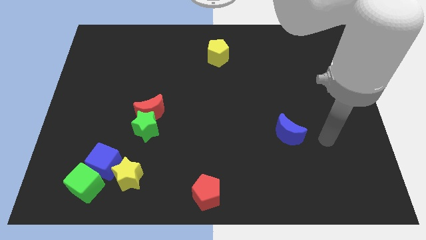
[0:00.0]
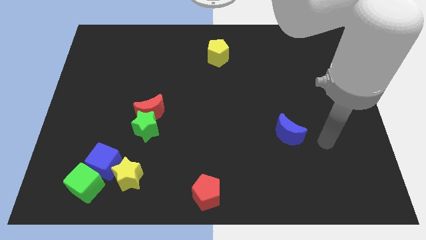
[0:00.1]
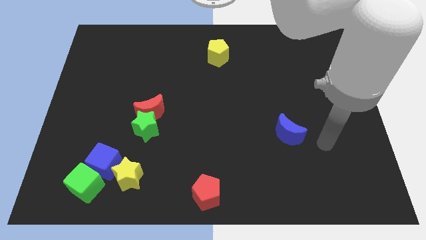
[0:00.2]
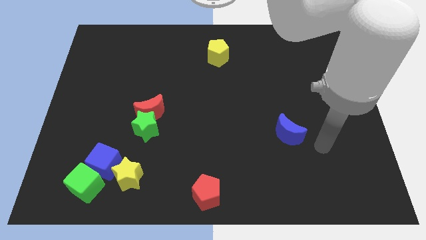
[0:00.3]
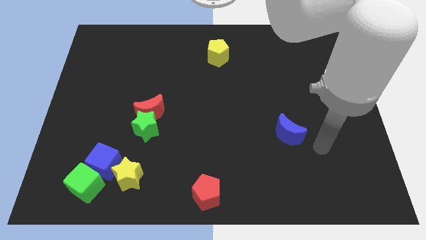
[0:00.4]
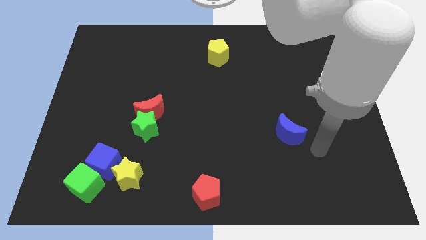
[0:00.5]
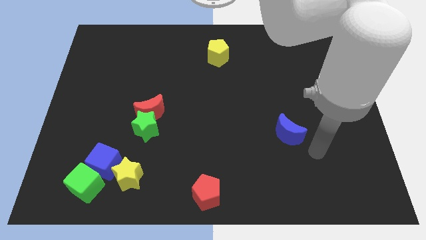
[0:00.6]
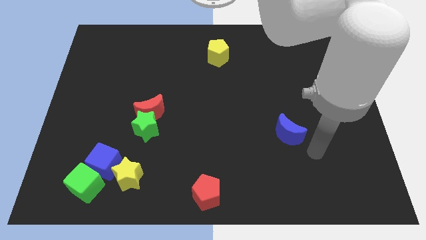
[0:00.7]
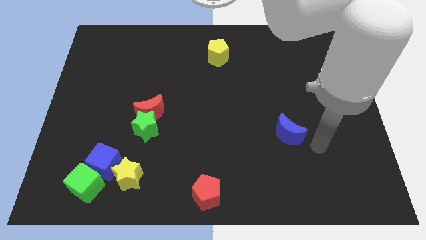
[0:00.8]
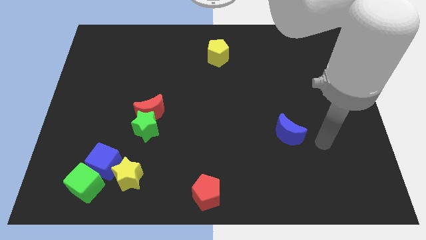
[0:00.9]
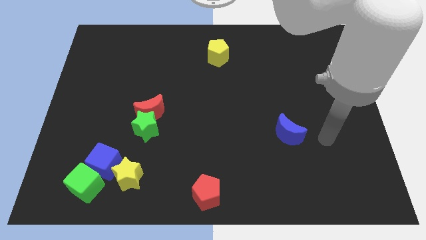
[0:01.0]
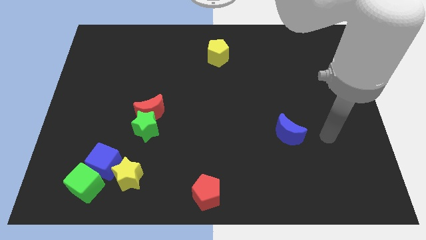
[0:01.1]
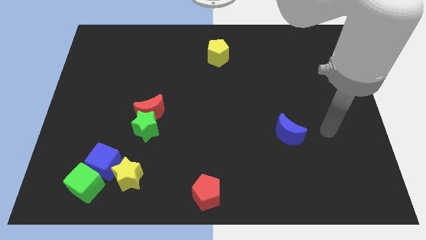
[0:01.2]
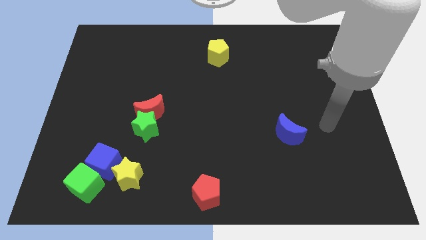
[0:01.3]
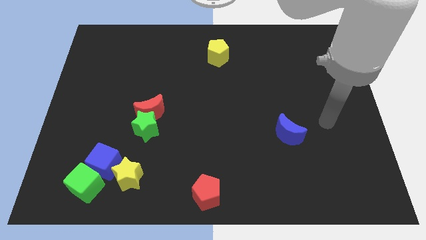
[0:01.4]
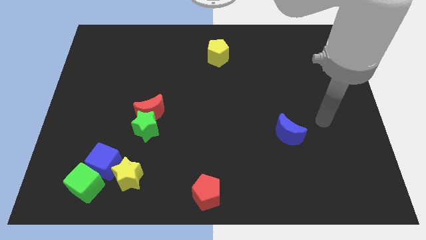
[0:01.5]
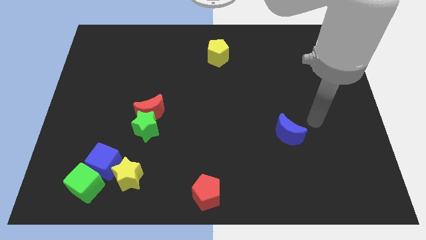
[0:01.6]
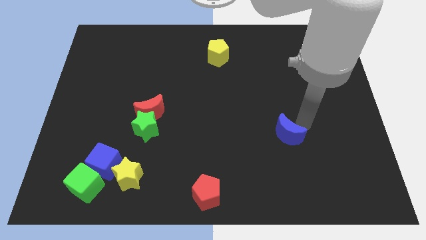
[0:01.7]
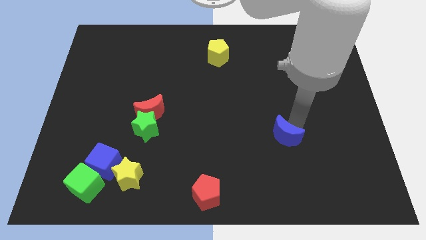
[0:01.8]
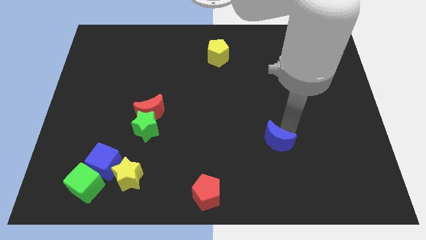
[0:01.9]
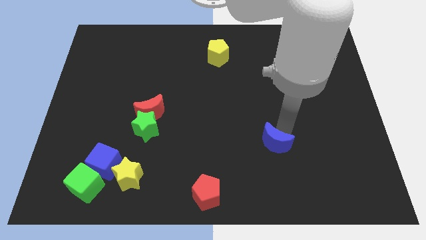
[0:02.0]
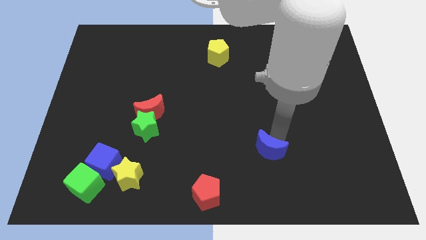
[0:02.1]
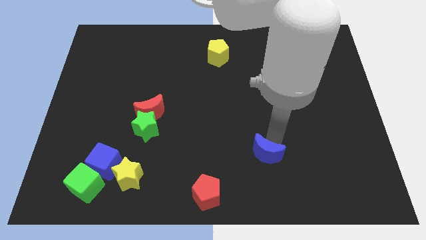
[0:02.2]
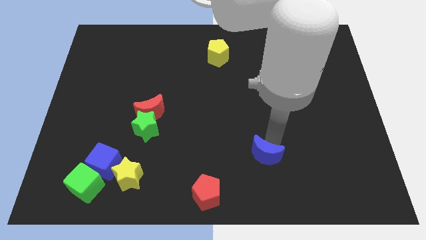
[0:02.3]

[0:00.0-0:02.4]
push the blue moon towards the red pentagon

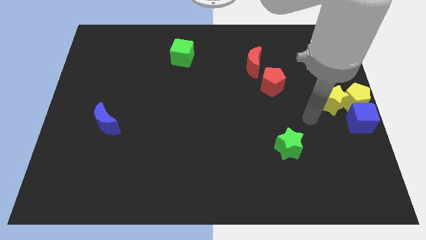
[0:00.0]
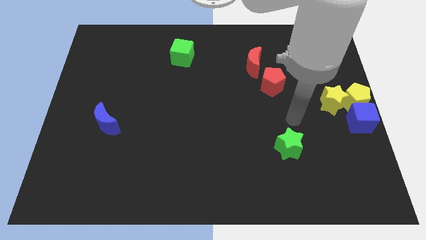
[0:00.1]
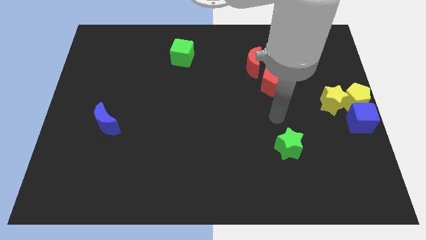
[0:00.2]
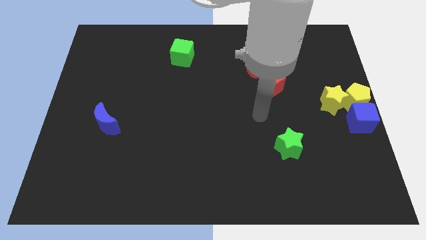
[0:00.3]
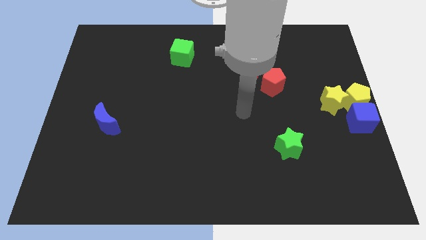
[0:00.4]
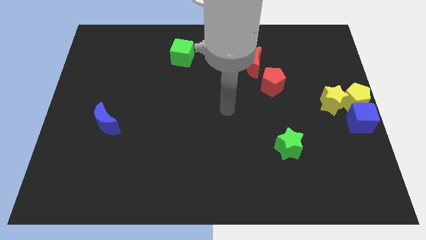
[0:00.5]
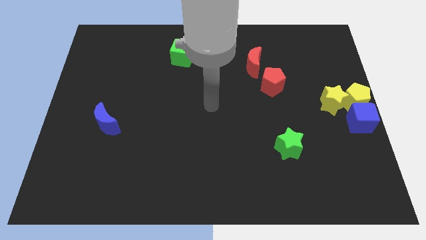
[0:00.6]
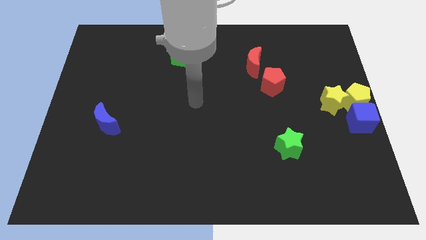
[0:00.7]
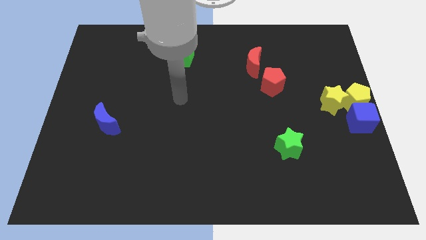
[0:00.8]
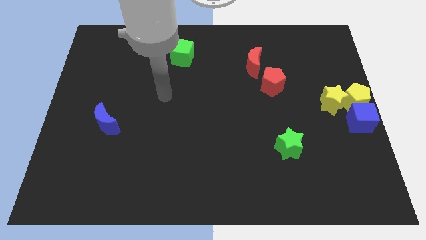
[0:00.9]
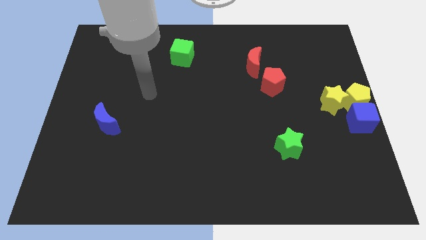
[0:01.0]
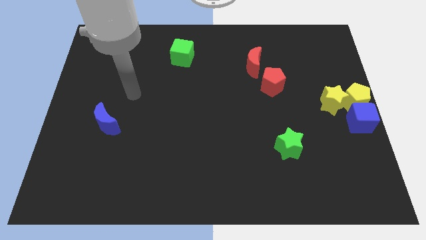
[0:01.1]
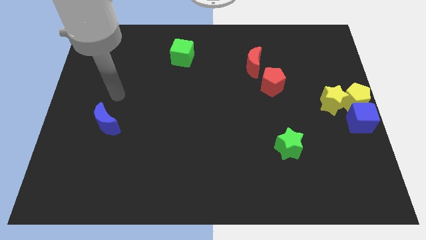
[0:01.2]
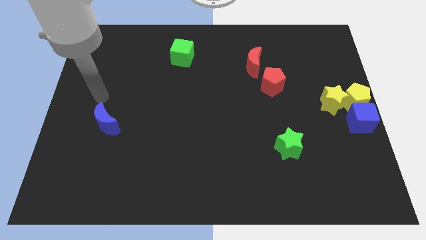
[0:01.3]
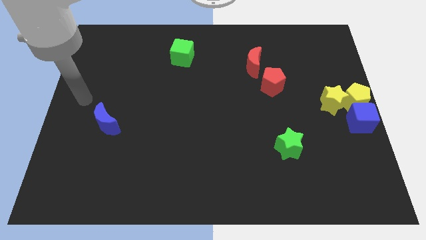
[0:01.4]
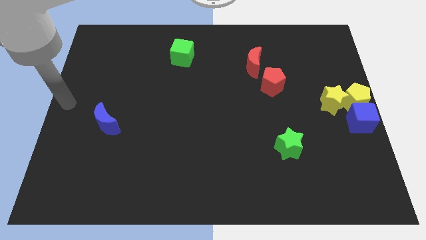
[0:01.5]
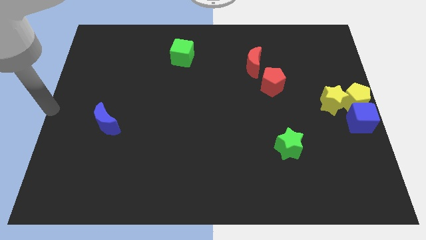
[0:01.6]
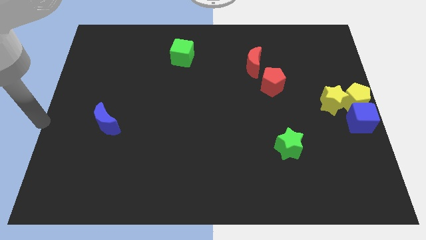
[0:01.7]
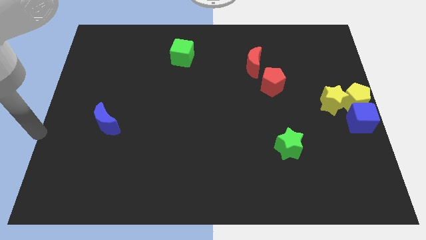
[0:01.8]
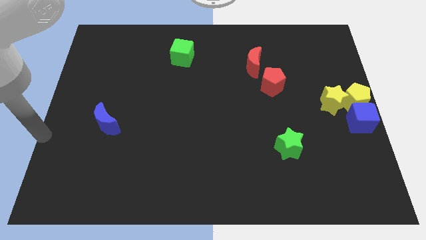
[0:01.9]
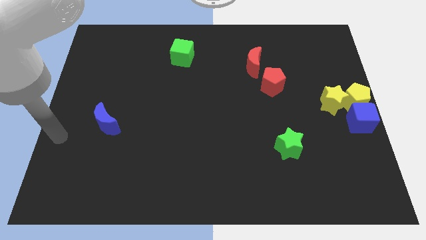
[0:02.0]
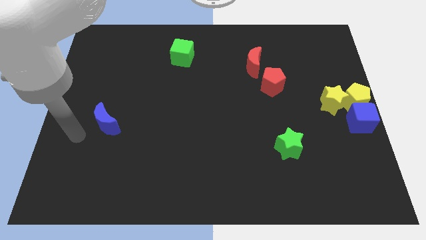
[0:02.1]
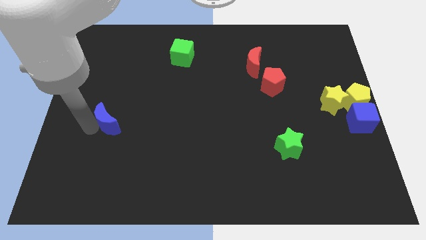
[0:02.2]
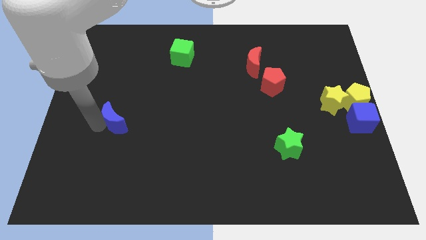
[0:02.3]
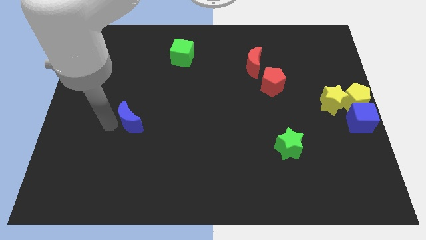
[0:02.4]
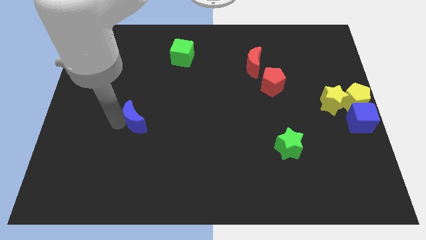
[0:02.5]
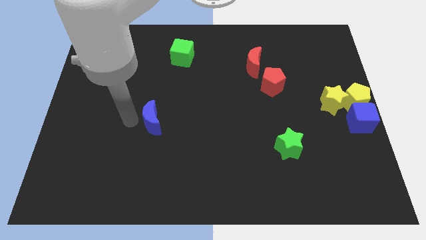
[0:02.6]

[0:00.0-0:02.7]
slightly move the blue crescent to the right side

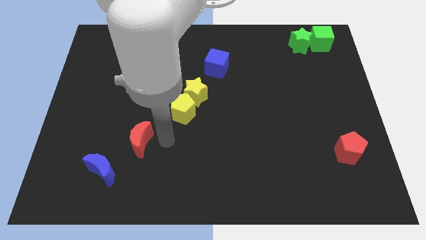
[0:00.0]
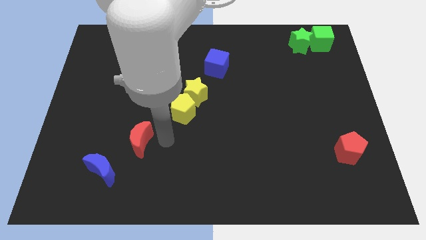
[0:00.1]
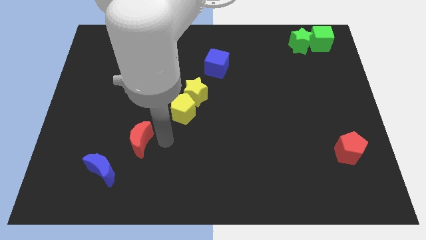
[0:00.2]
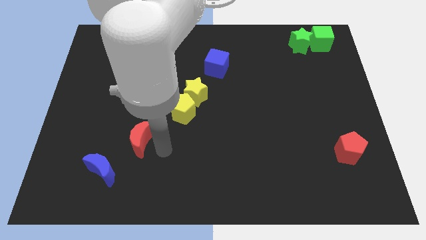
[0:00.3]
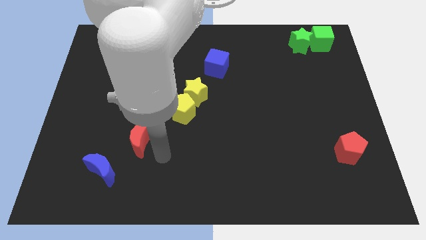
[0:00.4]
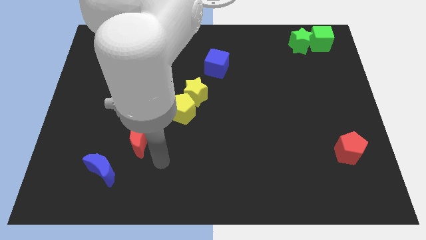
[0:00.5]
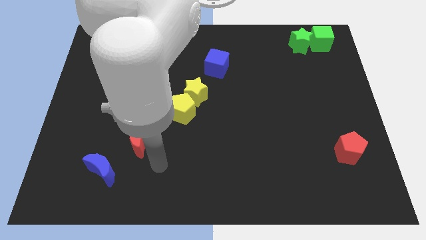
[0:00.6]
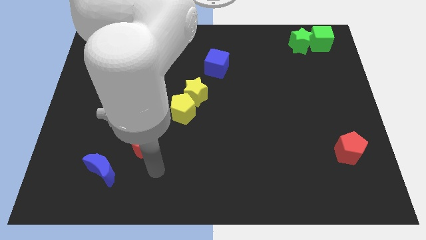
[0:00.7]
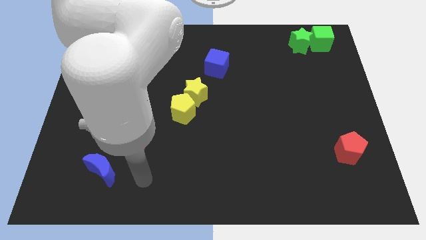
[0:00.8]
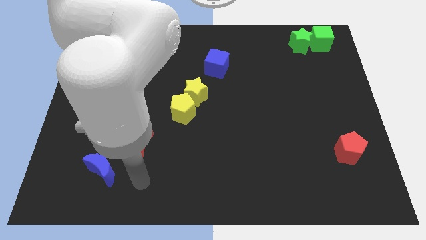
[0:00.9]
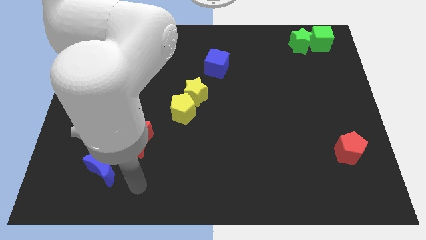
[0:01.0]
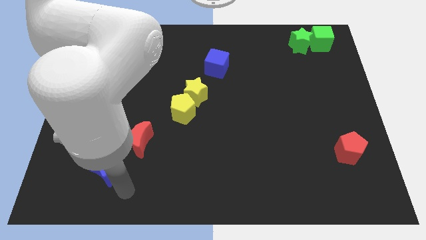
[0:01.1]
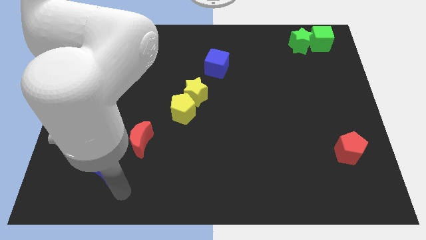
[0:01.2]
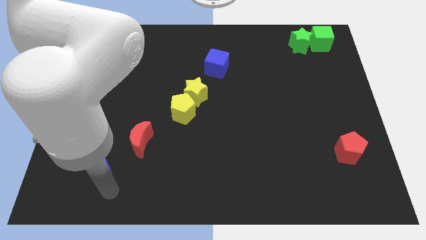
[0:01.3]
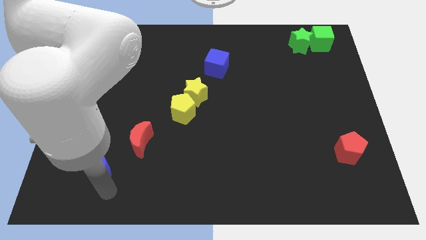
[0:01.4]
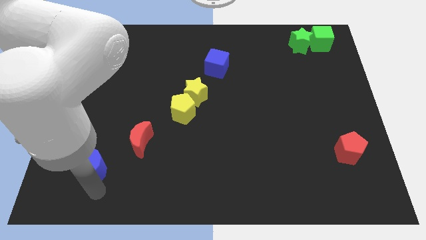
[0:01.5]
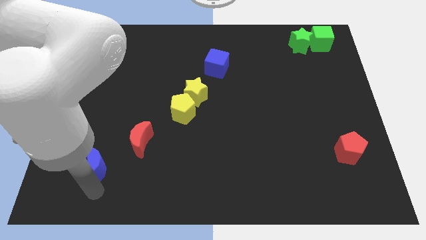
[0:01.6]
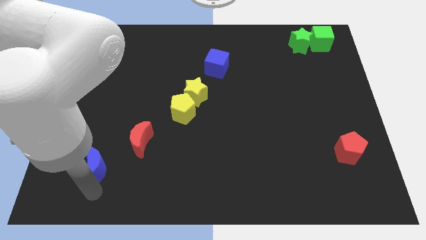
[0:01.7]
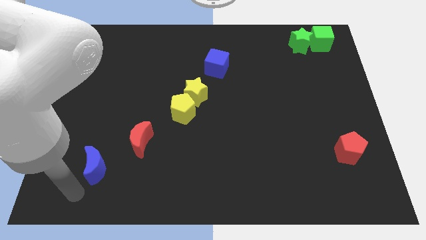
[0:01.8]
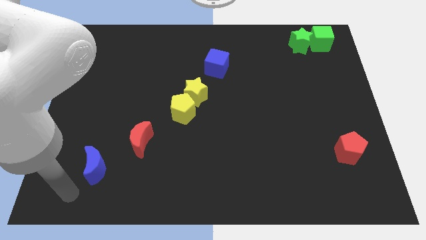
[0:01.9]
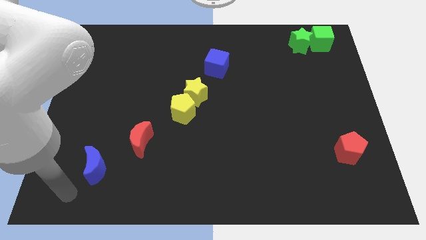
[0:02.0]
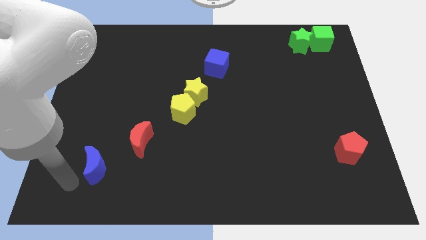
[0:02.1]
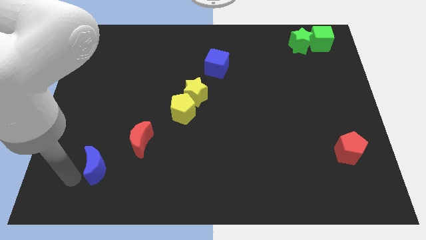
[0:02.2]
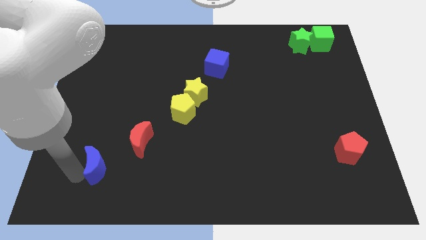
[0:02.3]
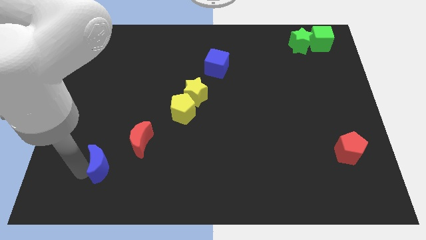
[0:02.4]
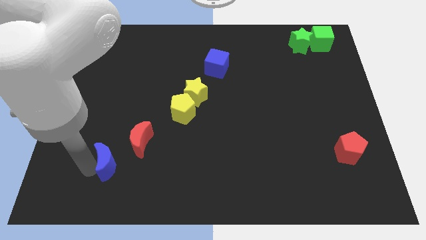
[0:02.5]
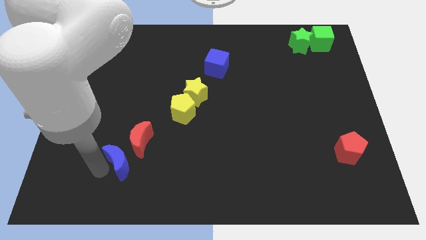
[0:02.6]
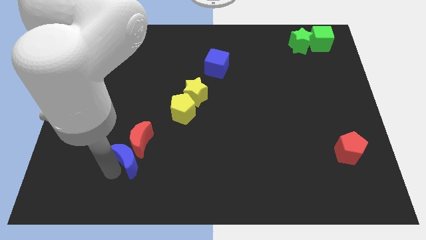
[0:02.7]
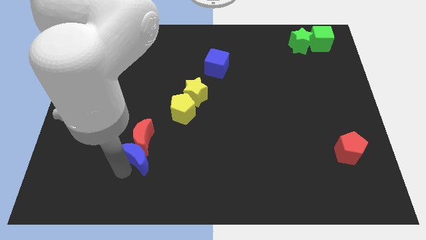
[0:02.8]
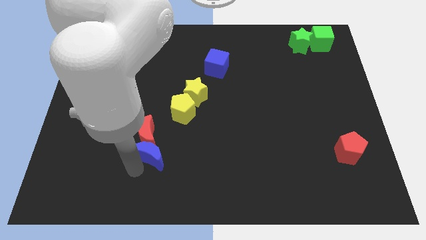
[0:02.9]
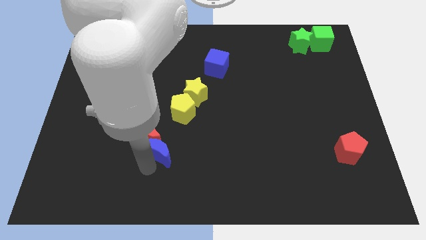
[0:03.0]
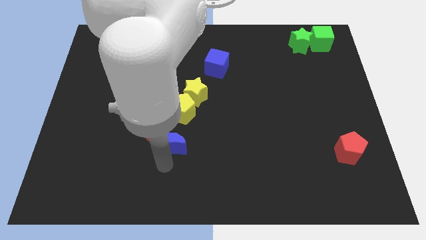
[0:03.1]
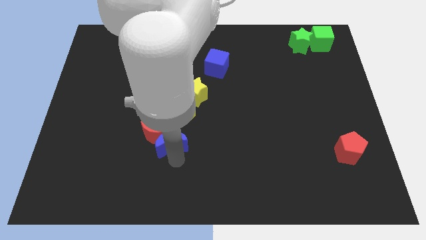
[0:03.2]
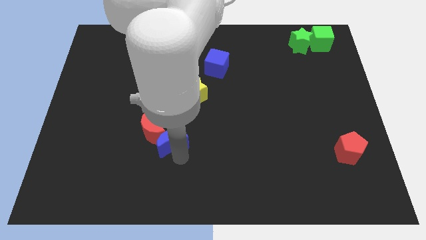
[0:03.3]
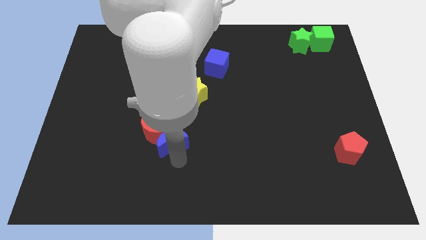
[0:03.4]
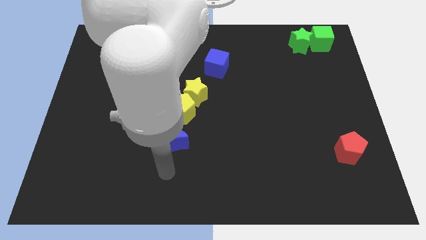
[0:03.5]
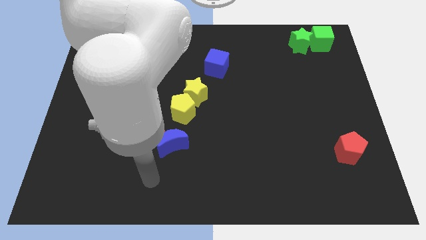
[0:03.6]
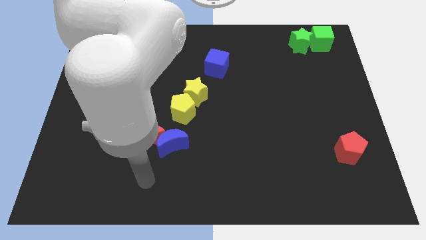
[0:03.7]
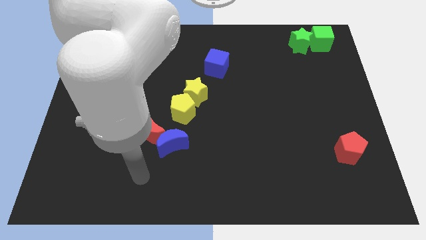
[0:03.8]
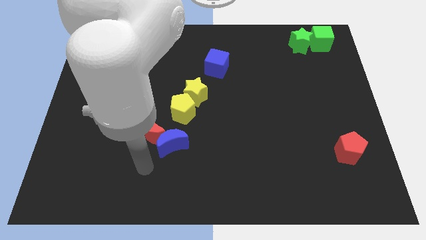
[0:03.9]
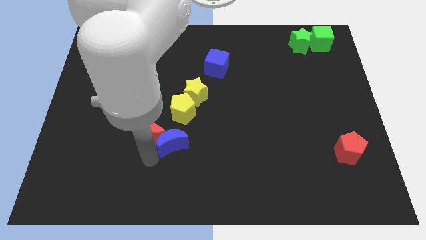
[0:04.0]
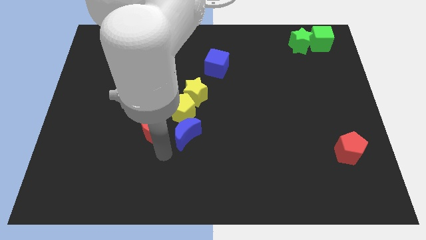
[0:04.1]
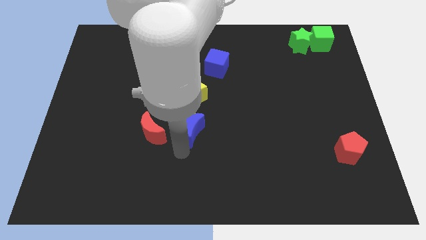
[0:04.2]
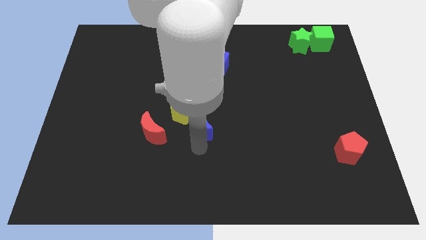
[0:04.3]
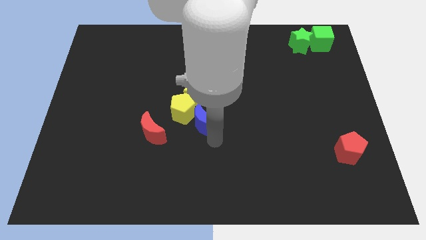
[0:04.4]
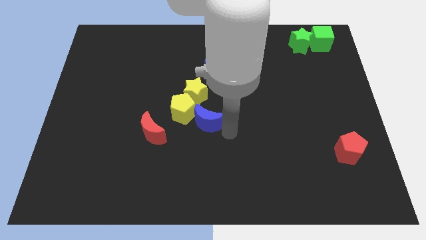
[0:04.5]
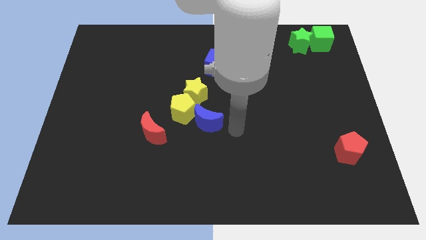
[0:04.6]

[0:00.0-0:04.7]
move the blue crescent to the right of the yellow pentagon
